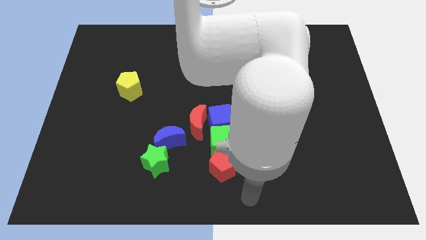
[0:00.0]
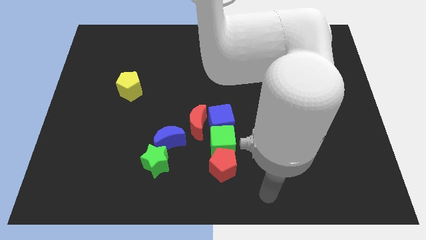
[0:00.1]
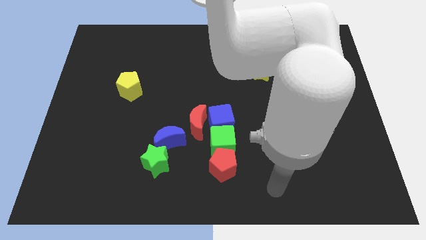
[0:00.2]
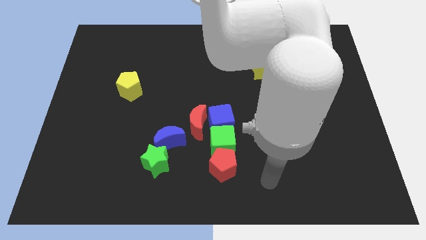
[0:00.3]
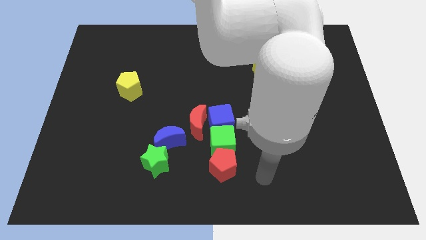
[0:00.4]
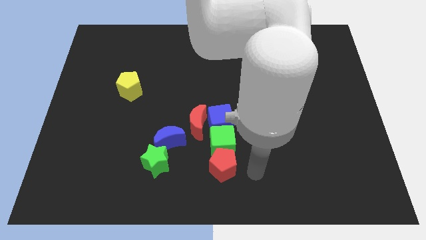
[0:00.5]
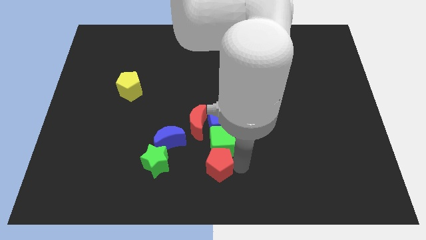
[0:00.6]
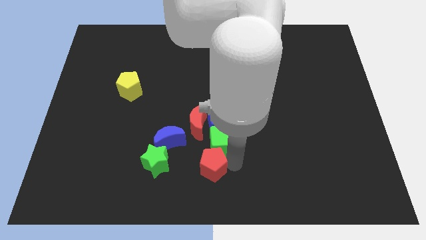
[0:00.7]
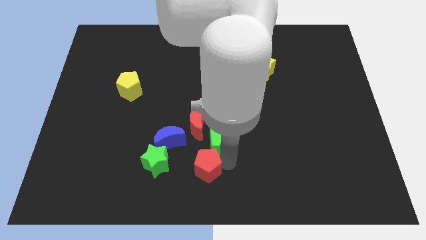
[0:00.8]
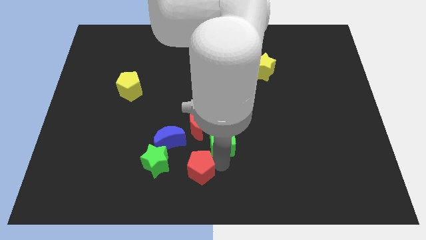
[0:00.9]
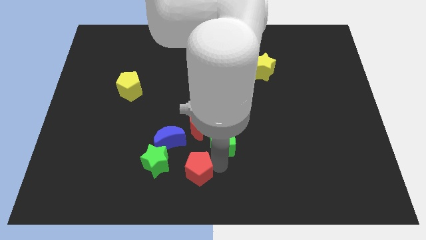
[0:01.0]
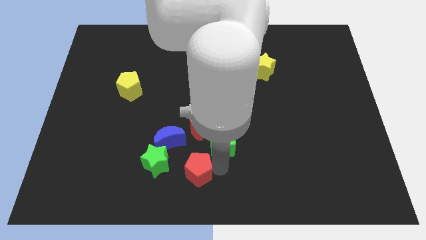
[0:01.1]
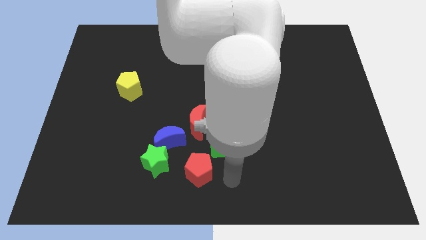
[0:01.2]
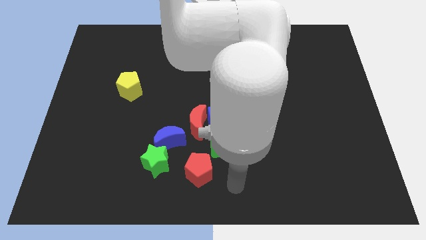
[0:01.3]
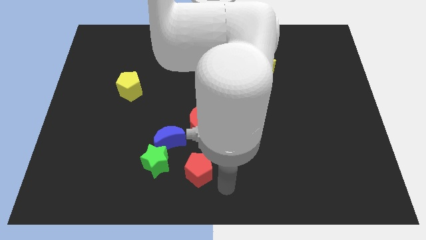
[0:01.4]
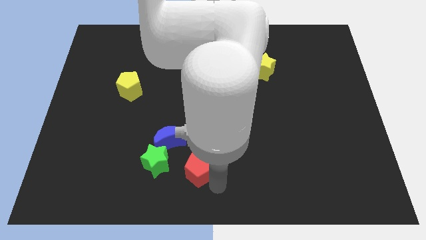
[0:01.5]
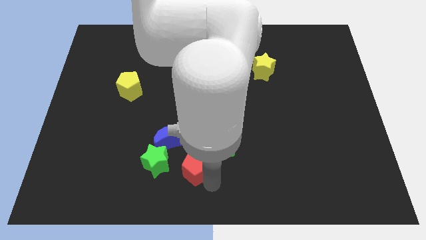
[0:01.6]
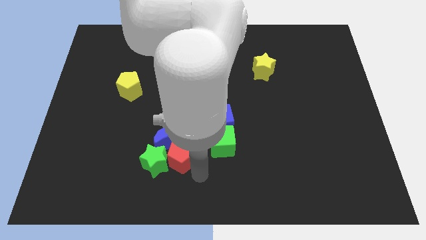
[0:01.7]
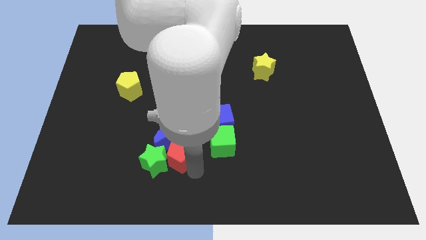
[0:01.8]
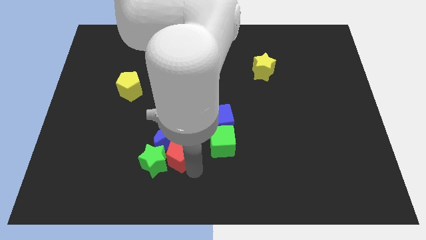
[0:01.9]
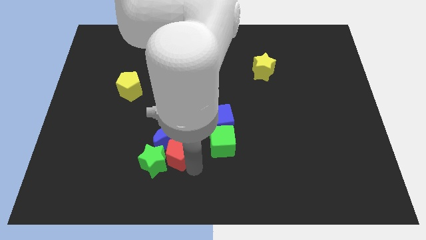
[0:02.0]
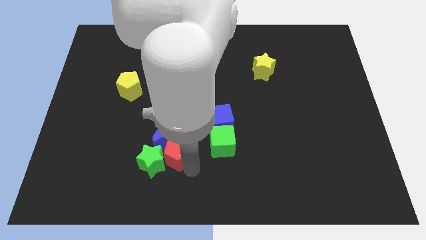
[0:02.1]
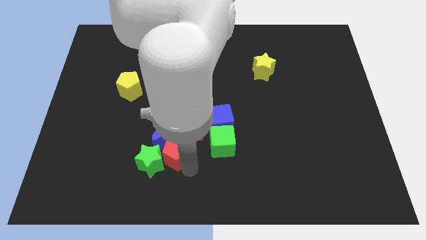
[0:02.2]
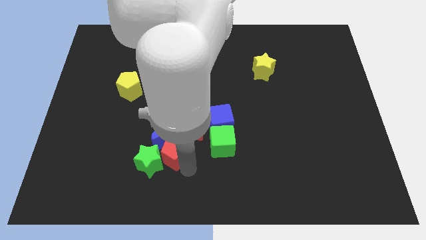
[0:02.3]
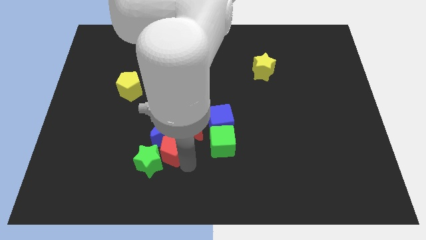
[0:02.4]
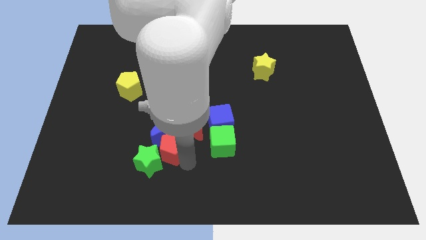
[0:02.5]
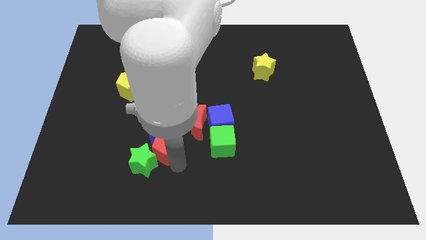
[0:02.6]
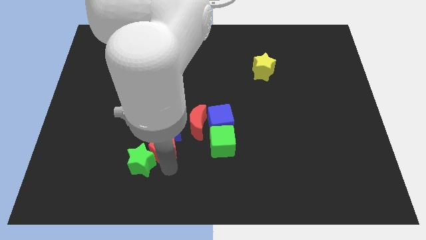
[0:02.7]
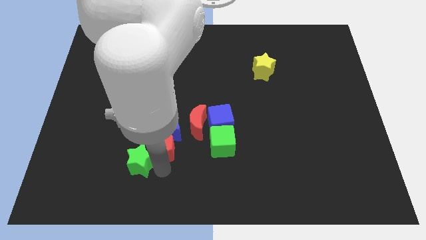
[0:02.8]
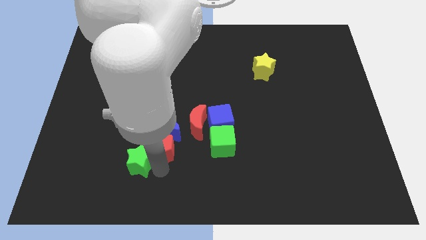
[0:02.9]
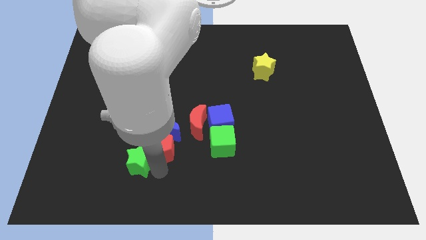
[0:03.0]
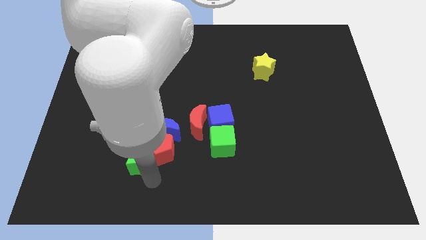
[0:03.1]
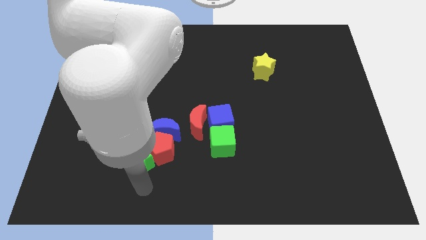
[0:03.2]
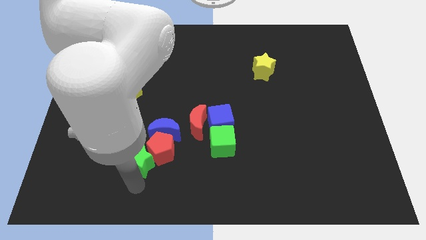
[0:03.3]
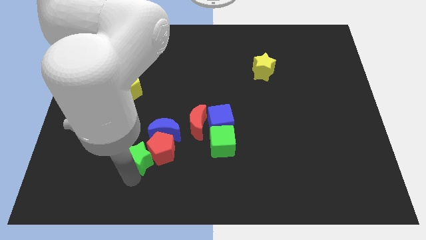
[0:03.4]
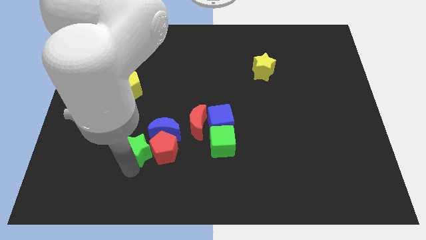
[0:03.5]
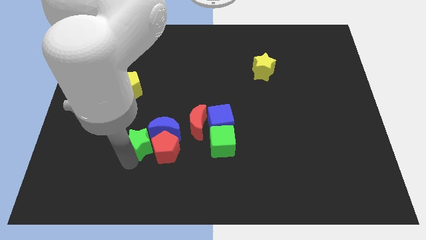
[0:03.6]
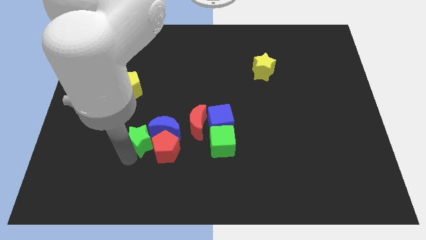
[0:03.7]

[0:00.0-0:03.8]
push the red pentagon and green star into the blue crescent

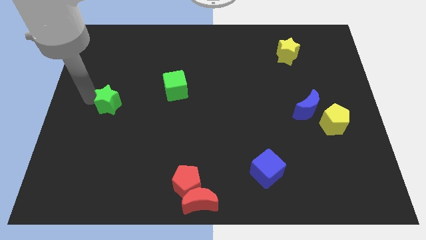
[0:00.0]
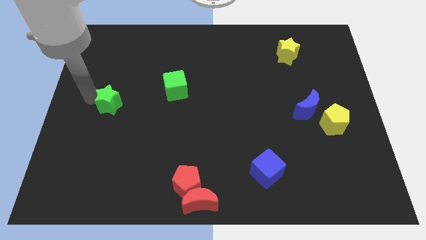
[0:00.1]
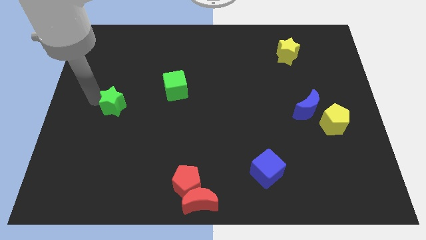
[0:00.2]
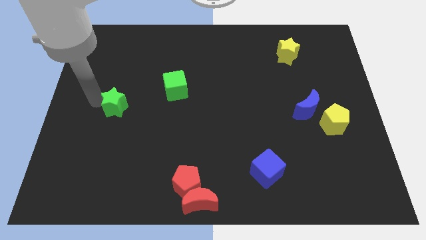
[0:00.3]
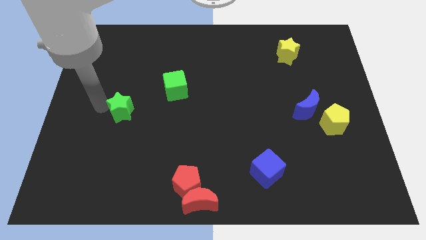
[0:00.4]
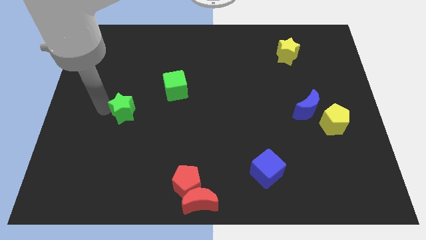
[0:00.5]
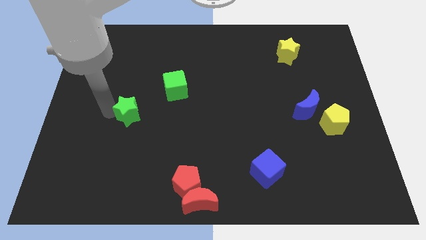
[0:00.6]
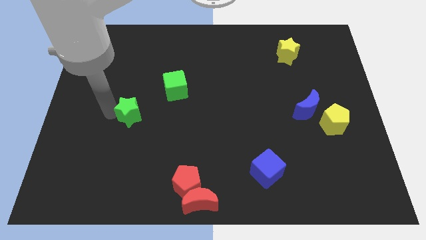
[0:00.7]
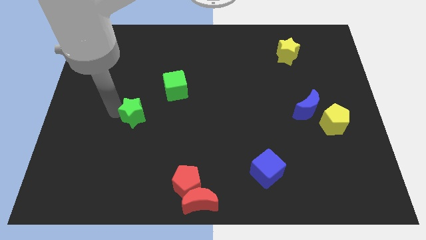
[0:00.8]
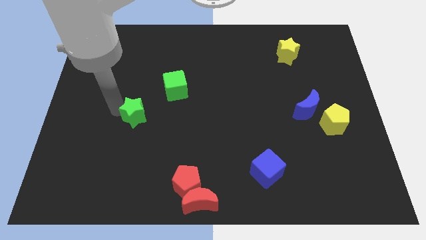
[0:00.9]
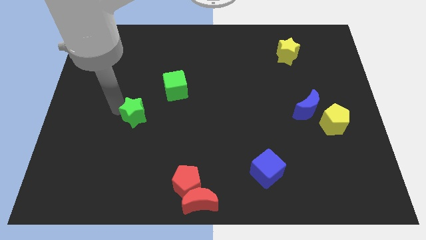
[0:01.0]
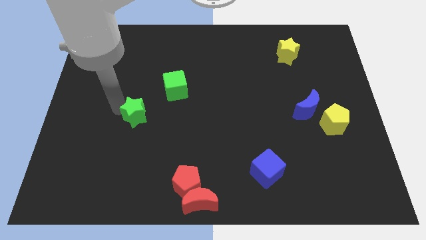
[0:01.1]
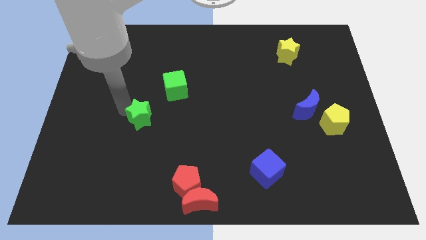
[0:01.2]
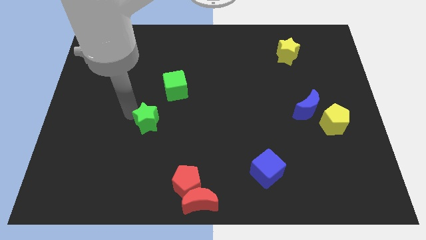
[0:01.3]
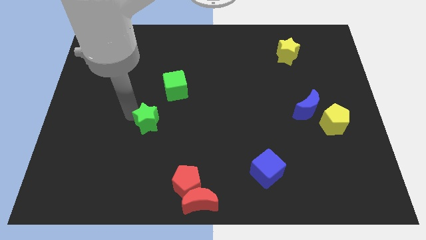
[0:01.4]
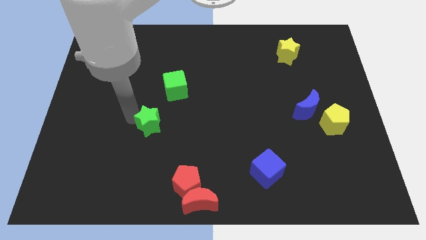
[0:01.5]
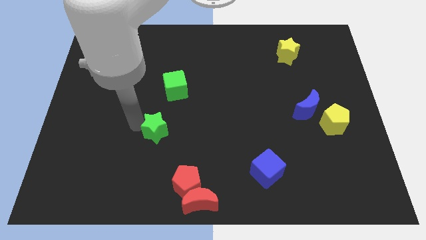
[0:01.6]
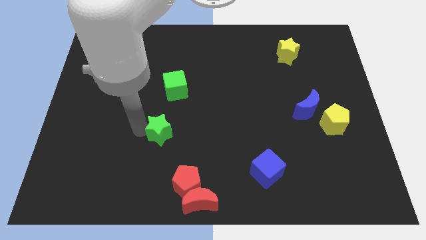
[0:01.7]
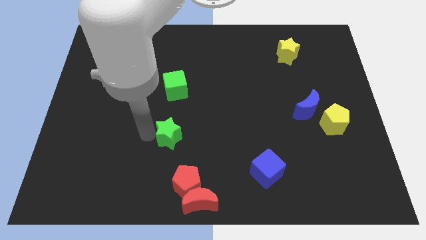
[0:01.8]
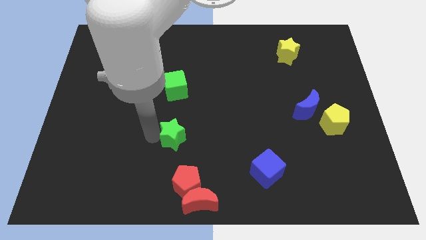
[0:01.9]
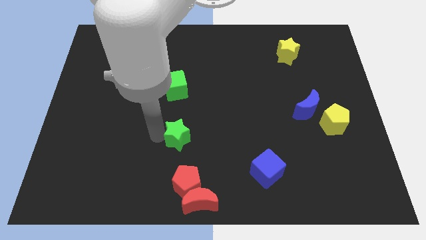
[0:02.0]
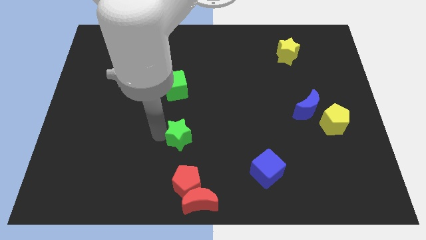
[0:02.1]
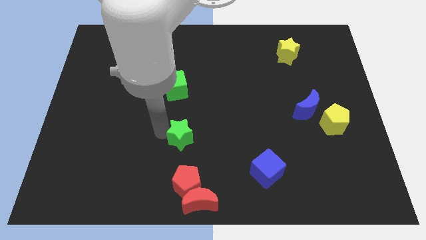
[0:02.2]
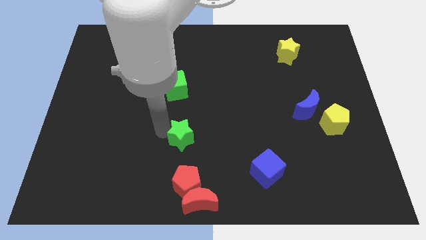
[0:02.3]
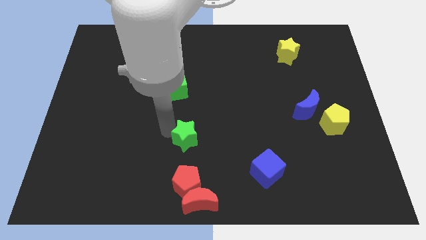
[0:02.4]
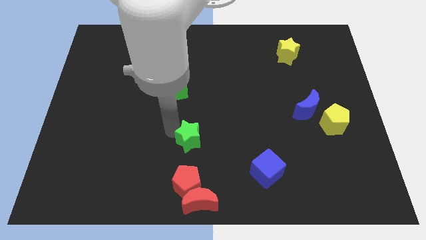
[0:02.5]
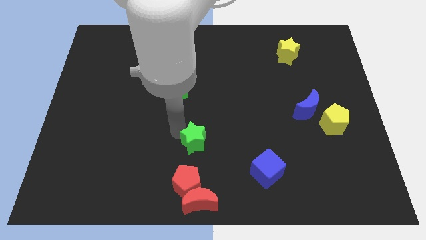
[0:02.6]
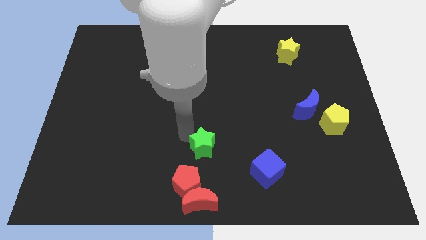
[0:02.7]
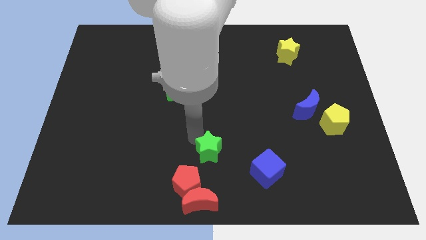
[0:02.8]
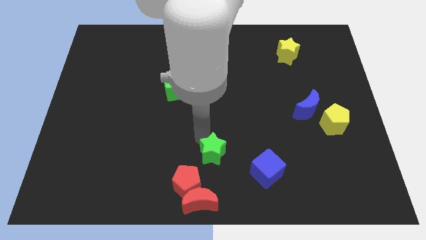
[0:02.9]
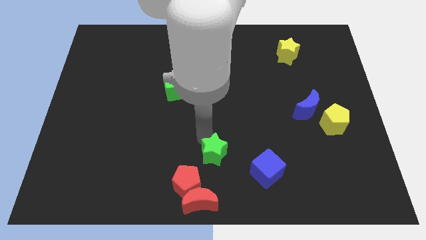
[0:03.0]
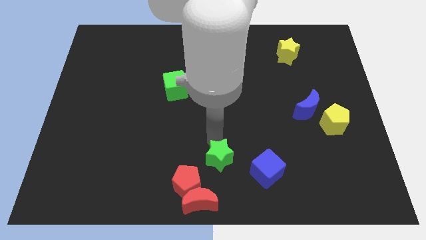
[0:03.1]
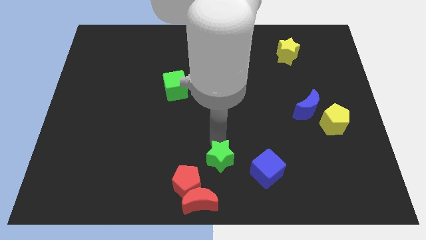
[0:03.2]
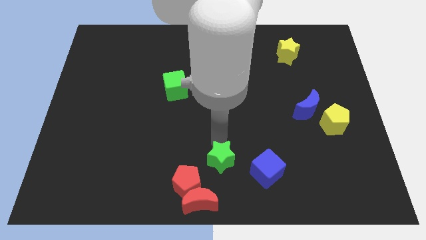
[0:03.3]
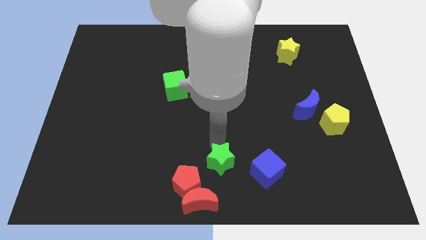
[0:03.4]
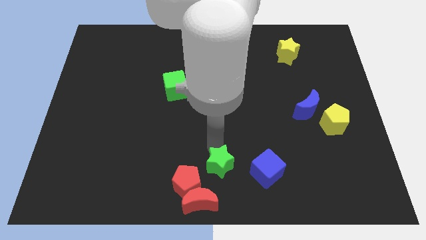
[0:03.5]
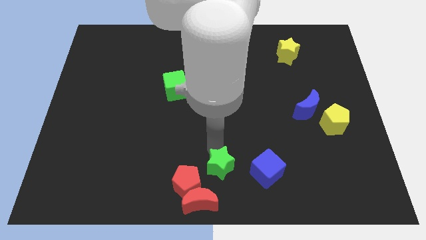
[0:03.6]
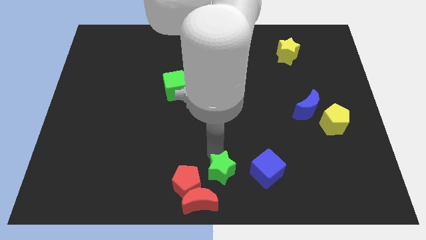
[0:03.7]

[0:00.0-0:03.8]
move the green star in between the red pentagon and blue cube

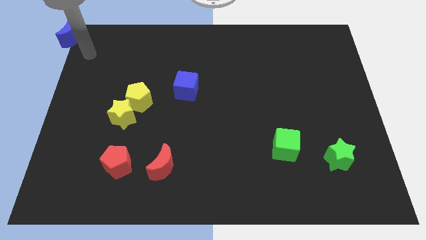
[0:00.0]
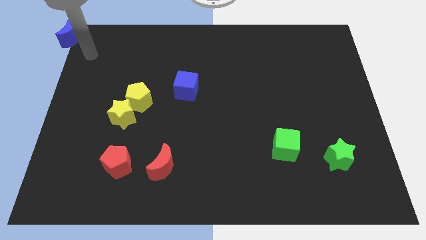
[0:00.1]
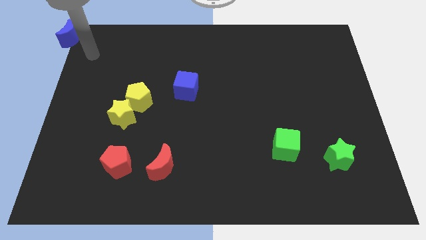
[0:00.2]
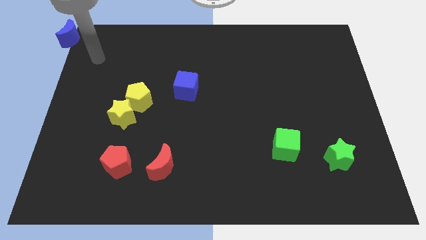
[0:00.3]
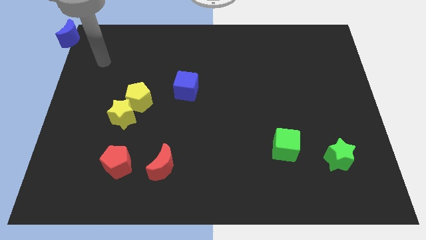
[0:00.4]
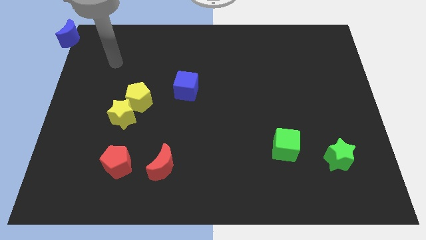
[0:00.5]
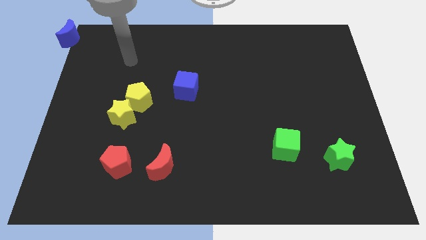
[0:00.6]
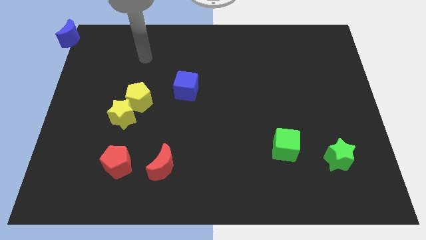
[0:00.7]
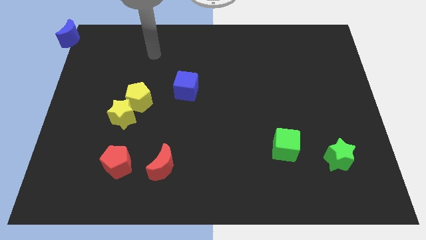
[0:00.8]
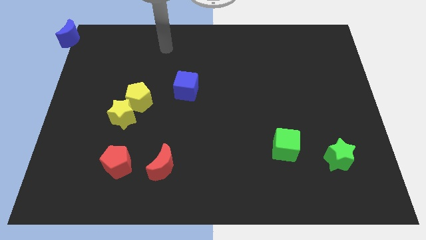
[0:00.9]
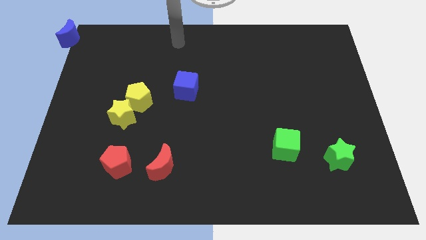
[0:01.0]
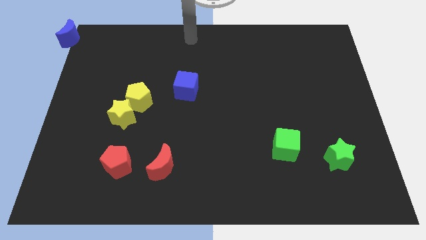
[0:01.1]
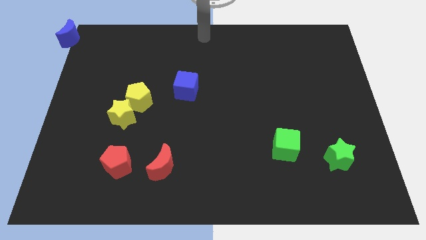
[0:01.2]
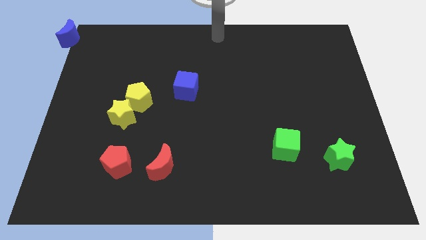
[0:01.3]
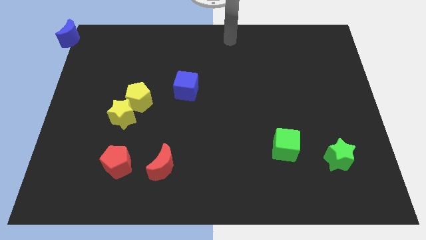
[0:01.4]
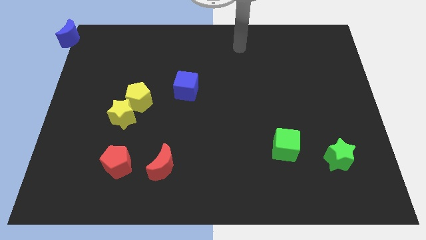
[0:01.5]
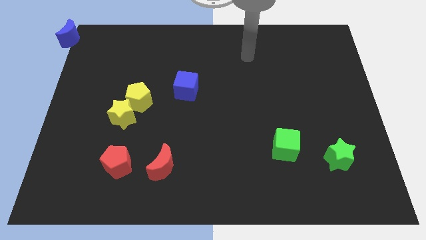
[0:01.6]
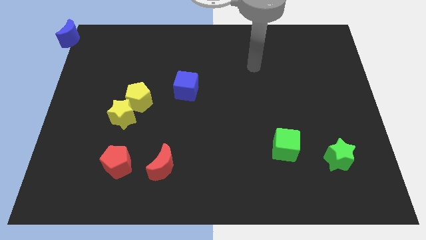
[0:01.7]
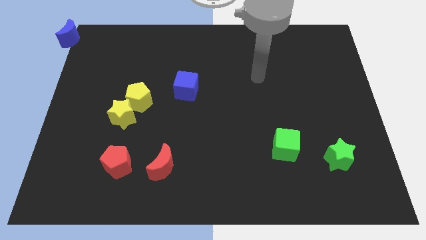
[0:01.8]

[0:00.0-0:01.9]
move the arm away from the blue moon
